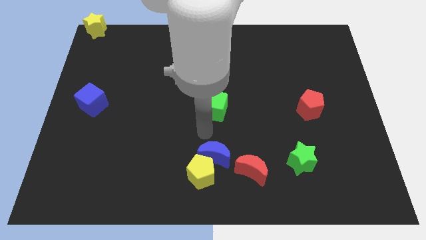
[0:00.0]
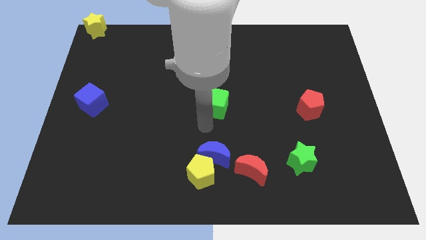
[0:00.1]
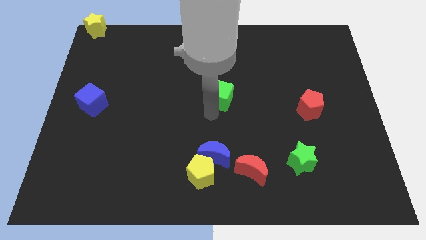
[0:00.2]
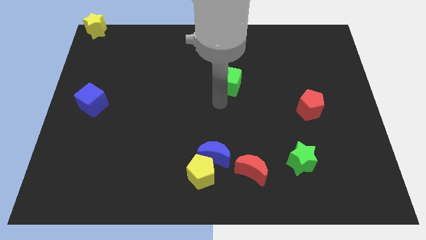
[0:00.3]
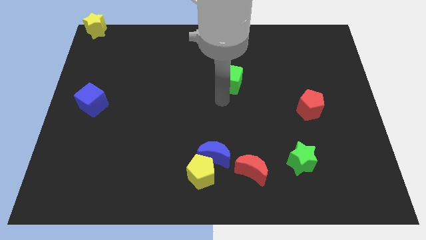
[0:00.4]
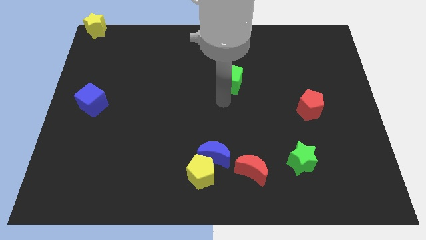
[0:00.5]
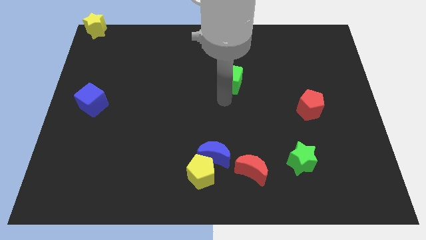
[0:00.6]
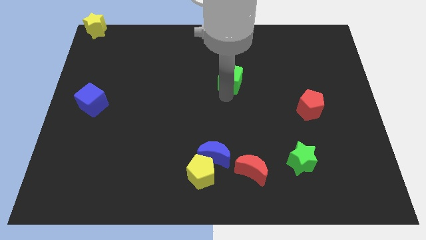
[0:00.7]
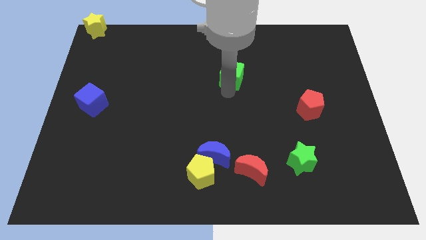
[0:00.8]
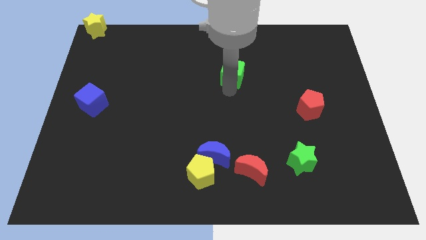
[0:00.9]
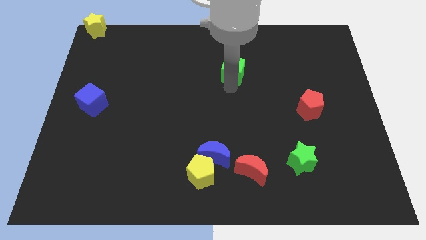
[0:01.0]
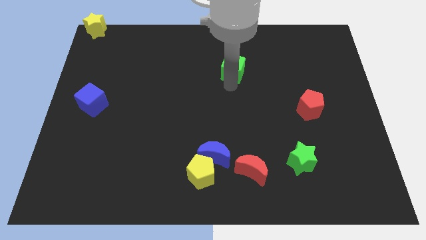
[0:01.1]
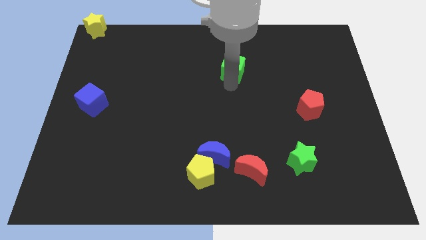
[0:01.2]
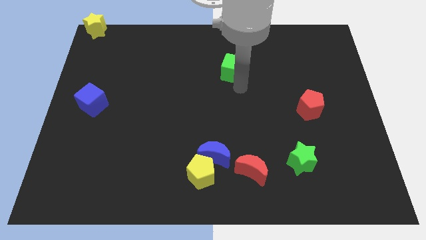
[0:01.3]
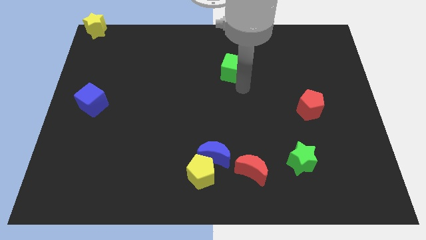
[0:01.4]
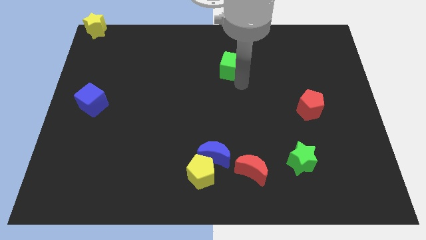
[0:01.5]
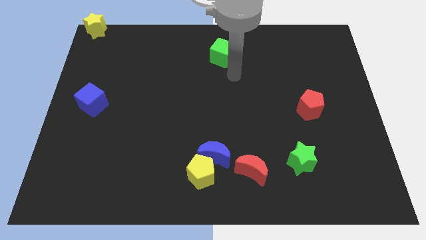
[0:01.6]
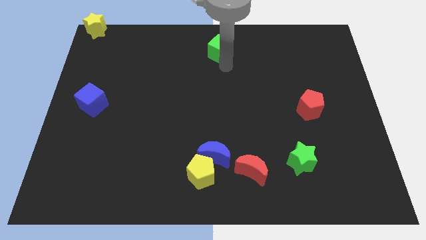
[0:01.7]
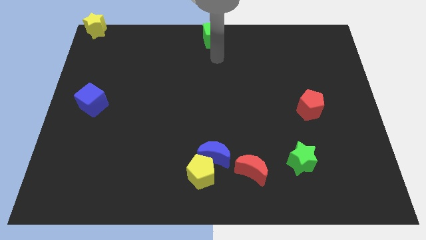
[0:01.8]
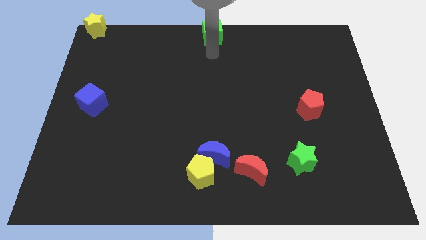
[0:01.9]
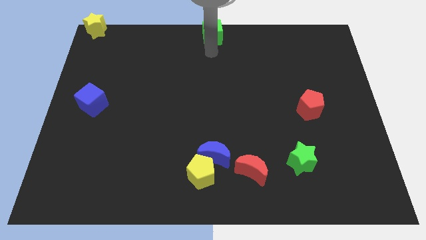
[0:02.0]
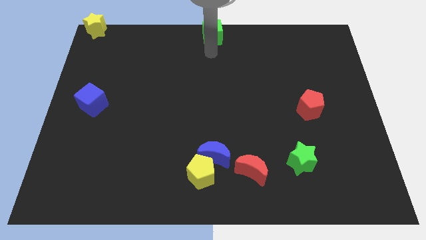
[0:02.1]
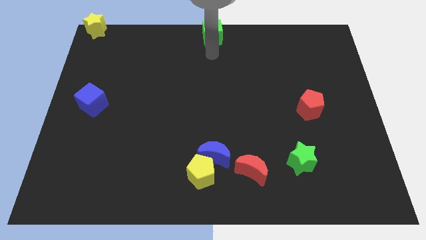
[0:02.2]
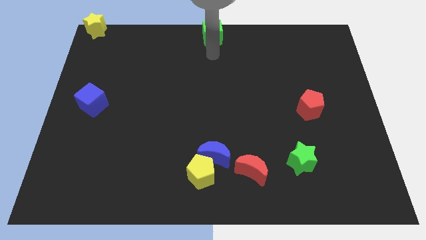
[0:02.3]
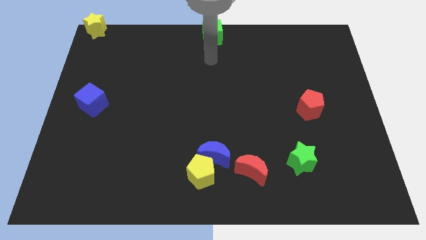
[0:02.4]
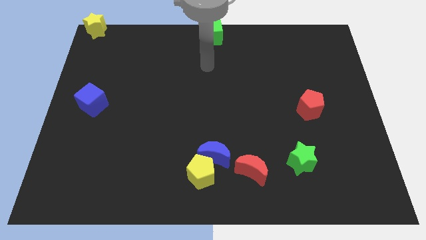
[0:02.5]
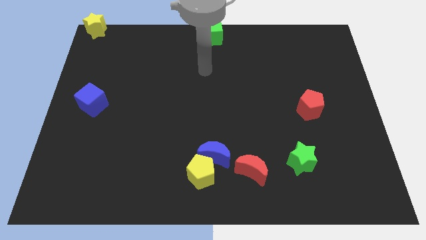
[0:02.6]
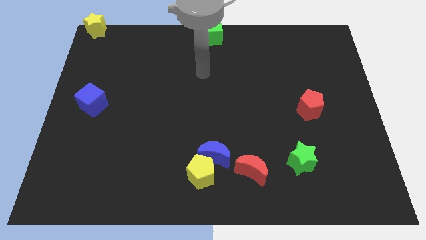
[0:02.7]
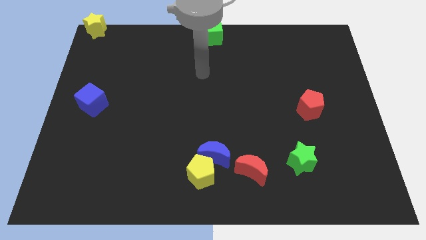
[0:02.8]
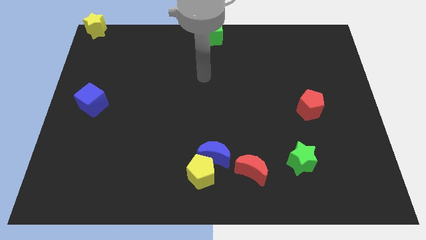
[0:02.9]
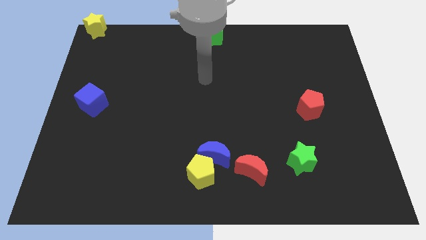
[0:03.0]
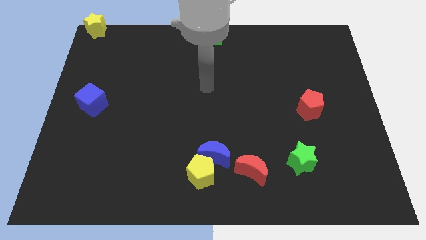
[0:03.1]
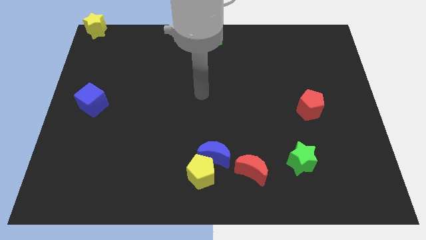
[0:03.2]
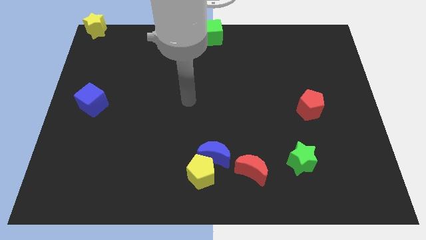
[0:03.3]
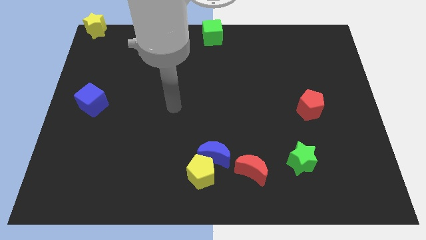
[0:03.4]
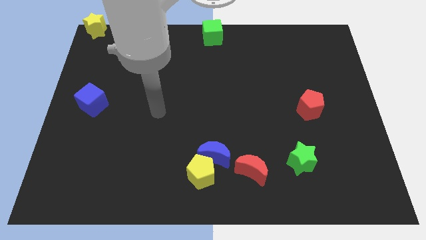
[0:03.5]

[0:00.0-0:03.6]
place the green cube at the top center of the board

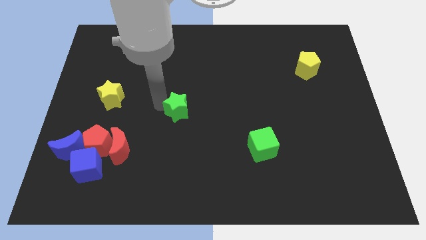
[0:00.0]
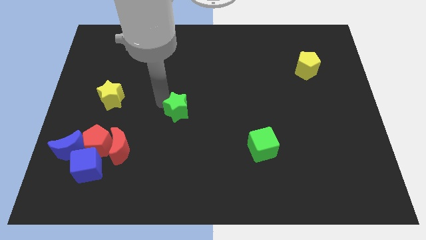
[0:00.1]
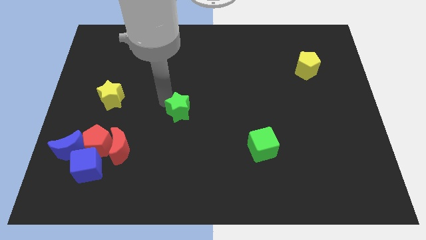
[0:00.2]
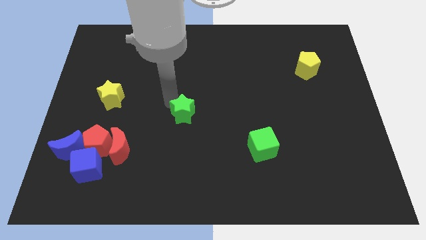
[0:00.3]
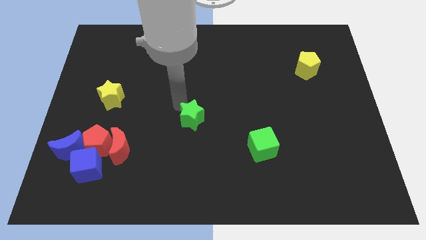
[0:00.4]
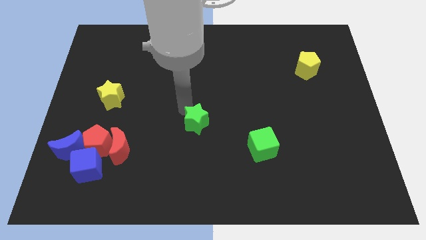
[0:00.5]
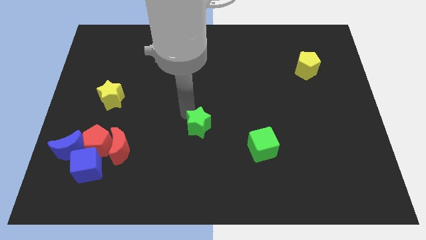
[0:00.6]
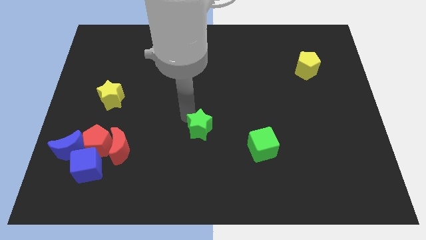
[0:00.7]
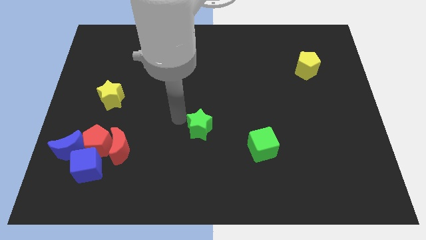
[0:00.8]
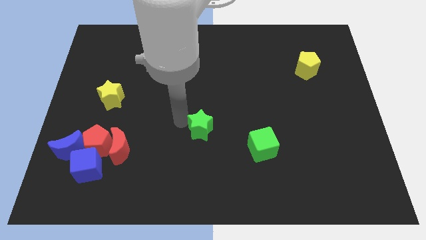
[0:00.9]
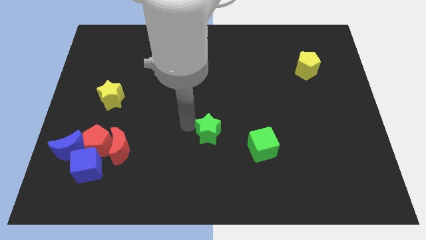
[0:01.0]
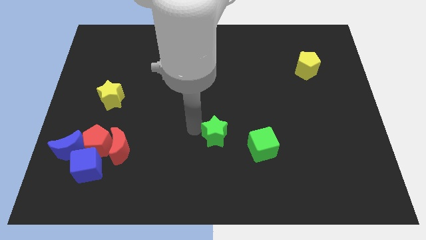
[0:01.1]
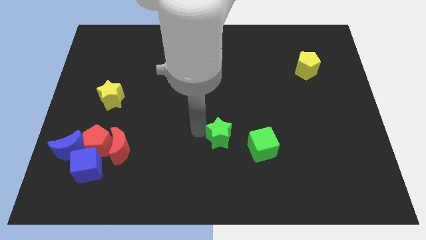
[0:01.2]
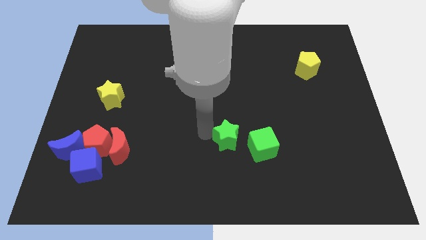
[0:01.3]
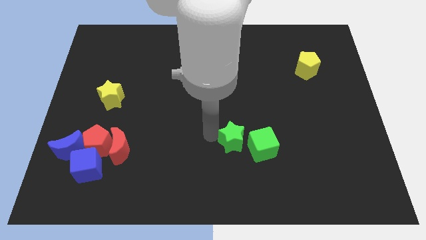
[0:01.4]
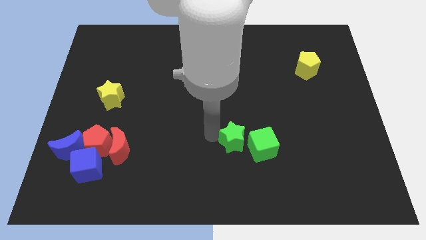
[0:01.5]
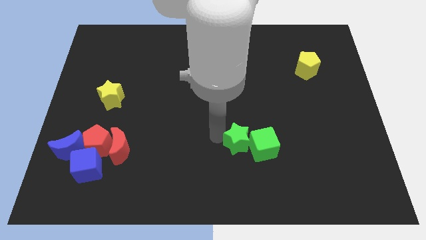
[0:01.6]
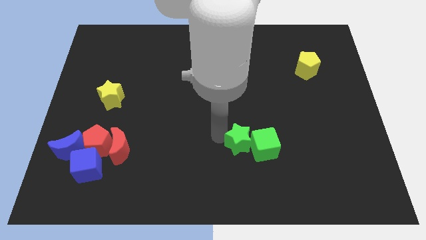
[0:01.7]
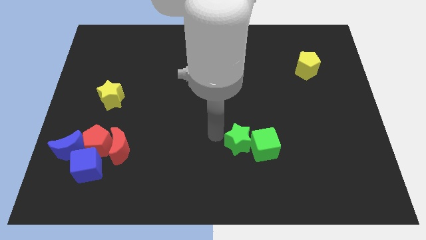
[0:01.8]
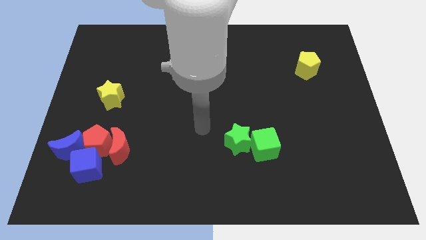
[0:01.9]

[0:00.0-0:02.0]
move the green star top left to the green cube

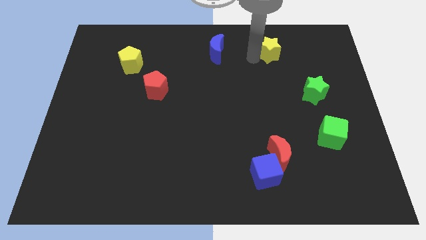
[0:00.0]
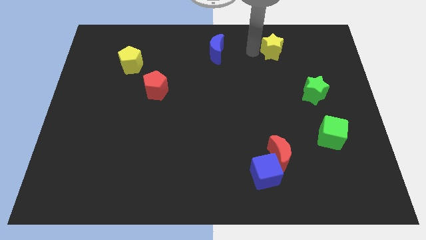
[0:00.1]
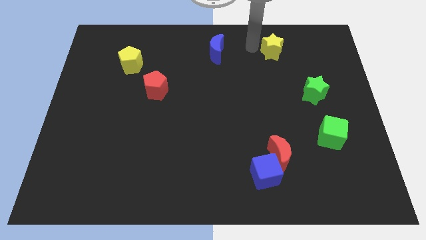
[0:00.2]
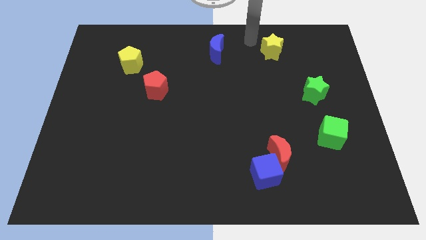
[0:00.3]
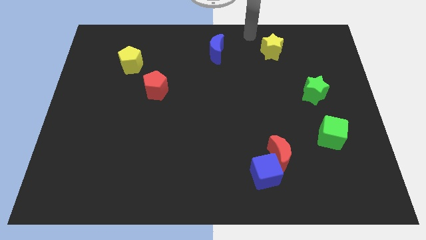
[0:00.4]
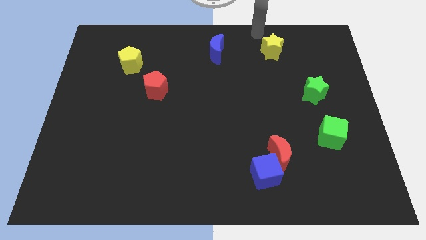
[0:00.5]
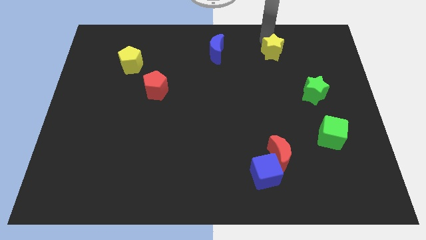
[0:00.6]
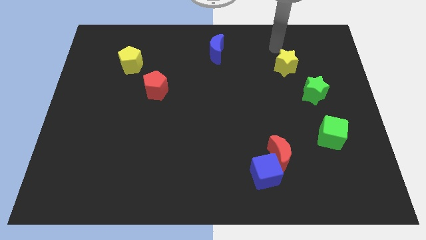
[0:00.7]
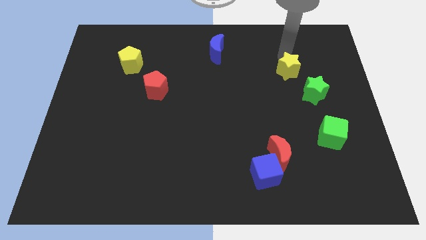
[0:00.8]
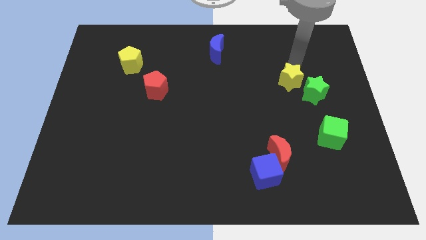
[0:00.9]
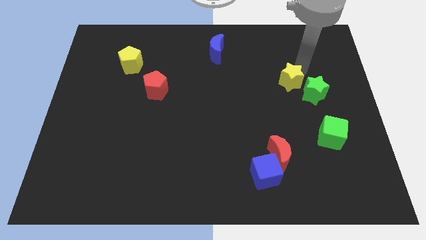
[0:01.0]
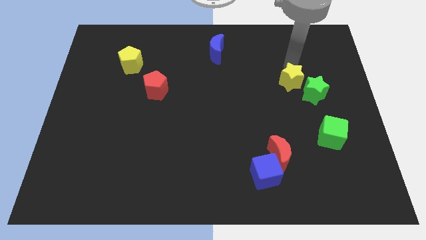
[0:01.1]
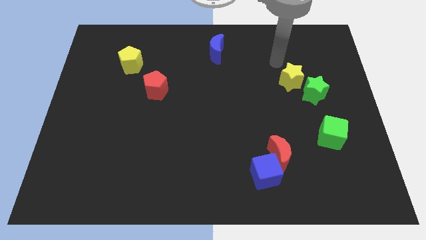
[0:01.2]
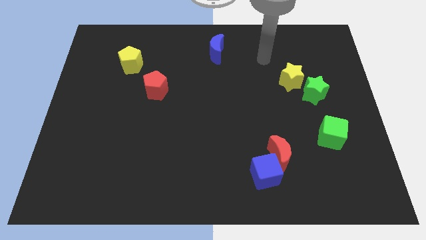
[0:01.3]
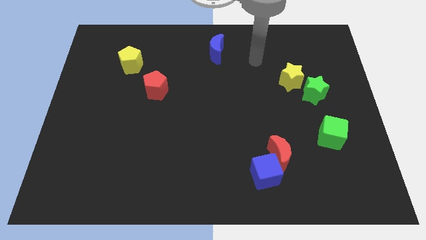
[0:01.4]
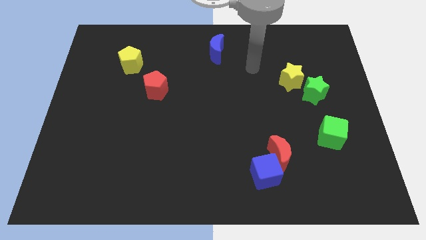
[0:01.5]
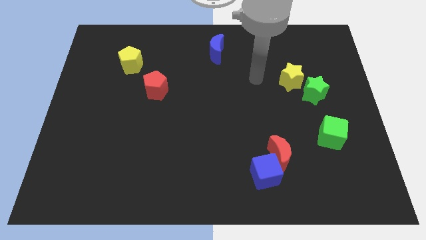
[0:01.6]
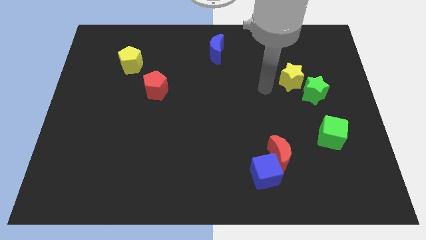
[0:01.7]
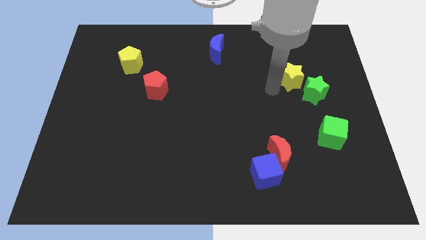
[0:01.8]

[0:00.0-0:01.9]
push yellow star towards green star

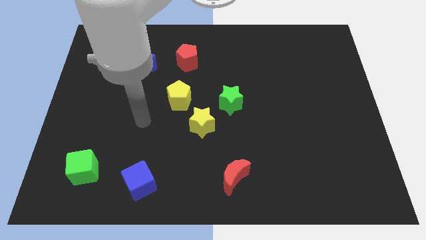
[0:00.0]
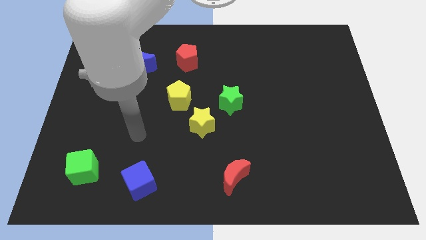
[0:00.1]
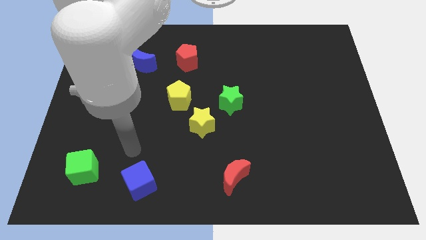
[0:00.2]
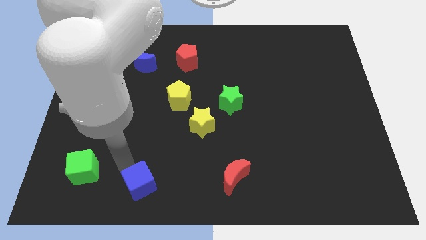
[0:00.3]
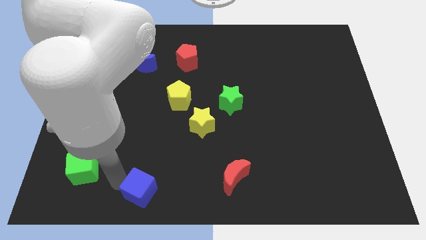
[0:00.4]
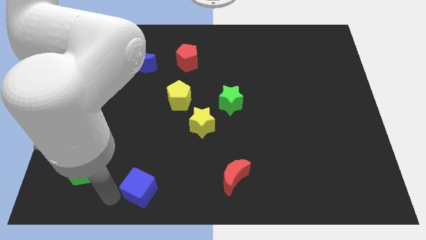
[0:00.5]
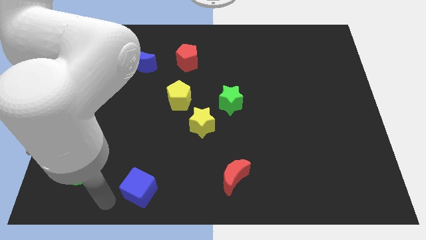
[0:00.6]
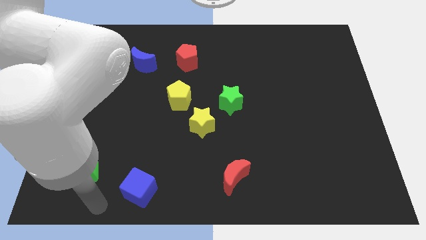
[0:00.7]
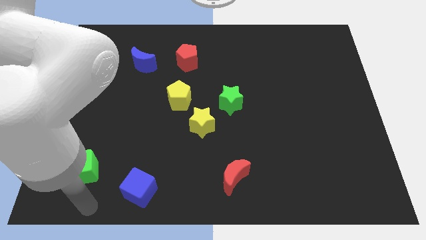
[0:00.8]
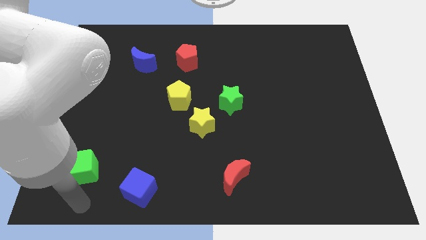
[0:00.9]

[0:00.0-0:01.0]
push the blue cube towards the bottom side of the board

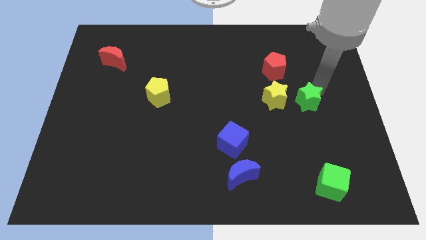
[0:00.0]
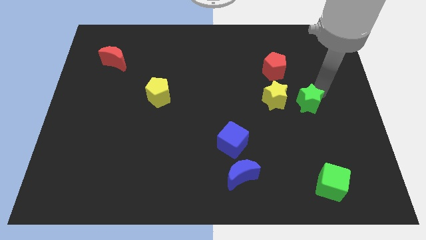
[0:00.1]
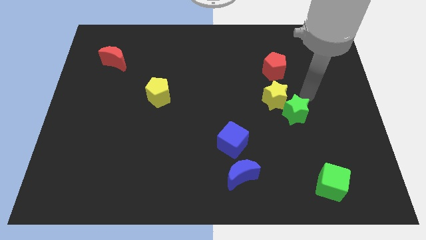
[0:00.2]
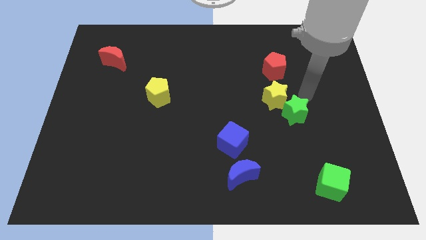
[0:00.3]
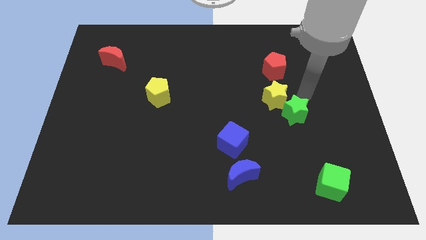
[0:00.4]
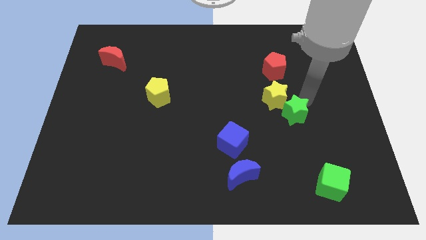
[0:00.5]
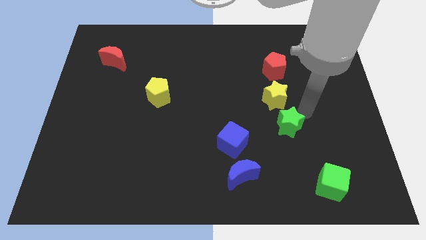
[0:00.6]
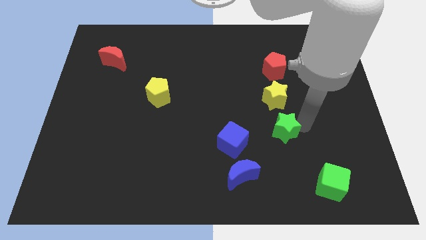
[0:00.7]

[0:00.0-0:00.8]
move the green star below the yellow star
